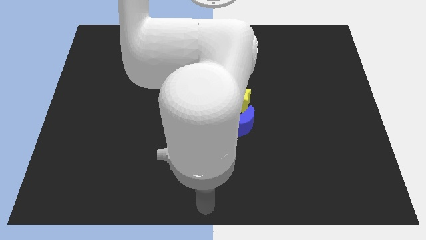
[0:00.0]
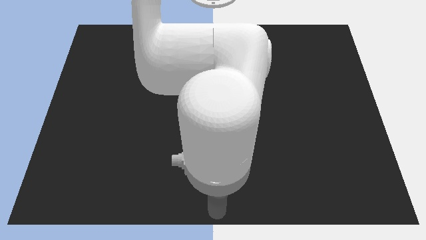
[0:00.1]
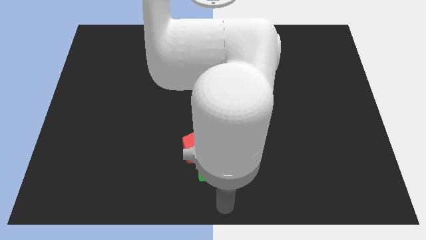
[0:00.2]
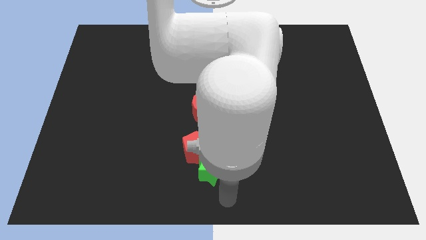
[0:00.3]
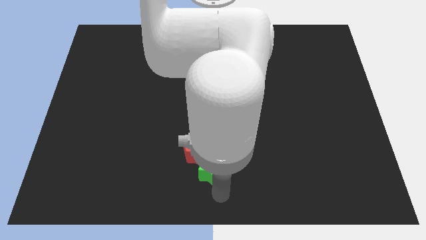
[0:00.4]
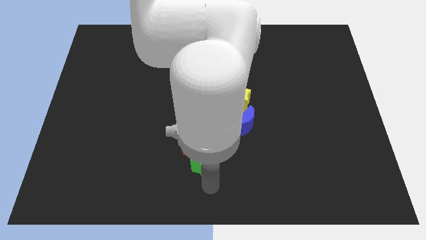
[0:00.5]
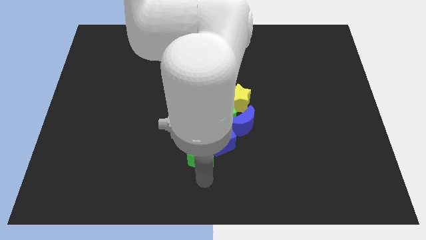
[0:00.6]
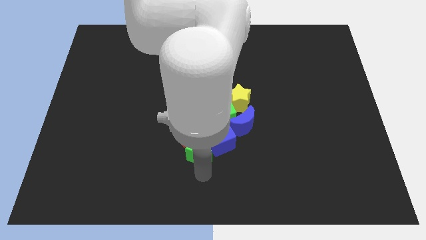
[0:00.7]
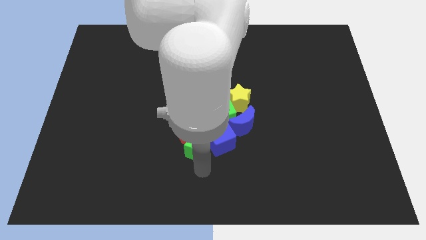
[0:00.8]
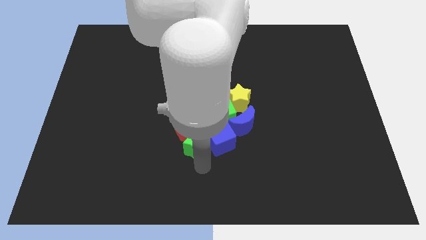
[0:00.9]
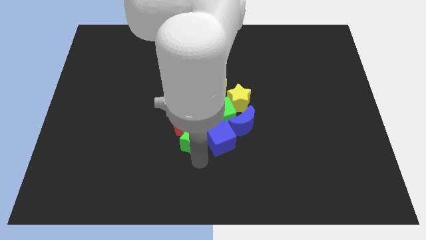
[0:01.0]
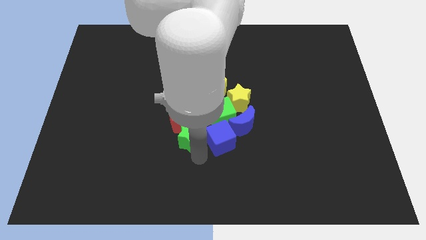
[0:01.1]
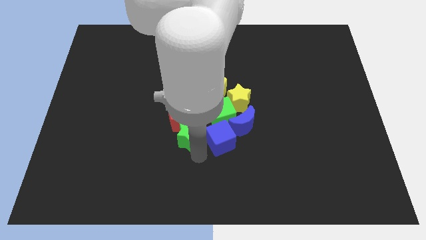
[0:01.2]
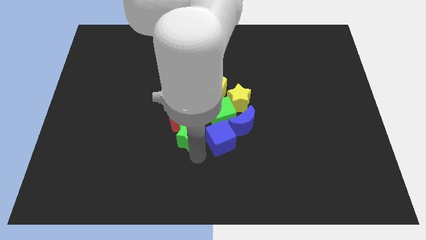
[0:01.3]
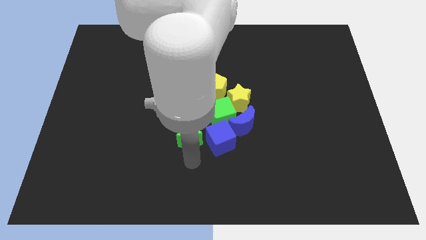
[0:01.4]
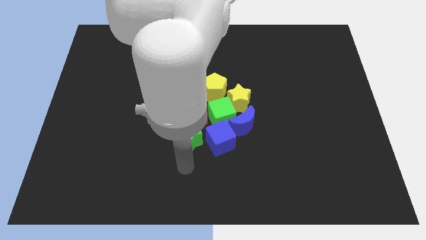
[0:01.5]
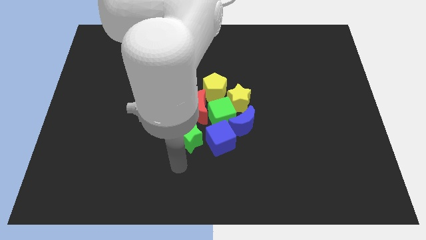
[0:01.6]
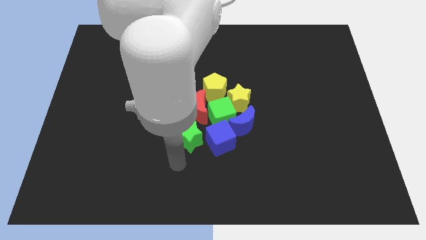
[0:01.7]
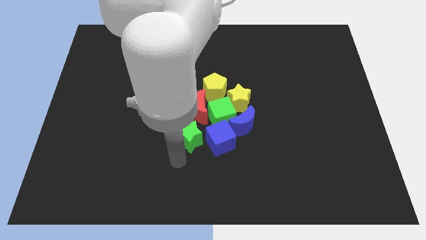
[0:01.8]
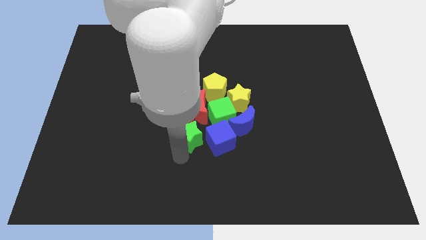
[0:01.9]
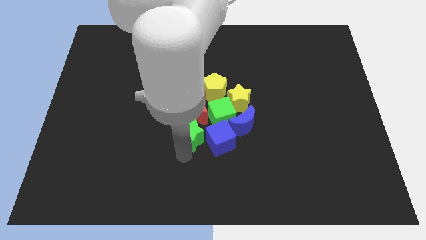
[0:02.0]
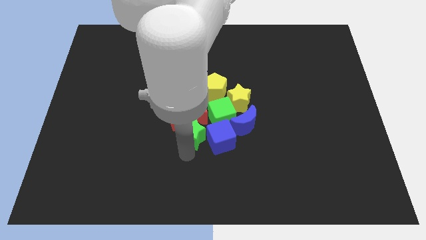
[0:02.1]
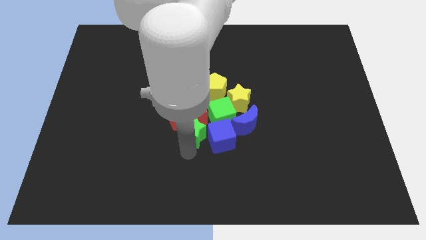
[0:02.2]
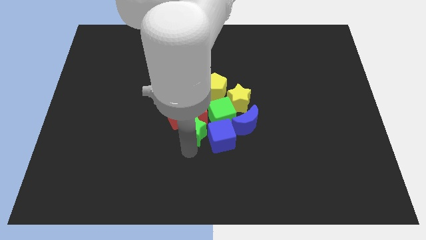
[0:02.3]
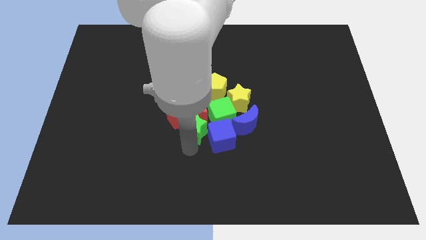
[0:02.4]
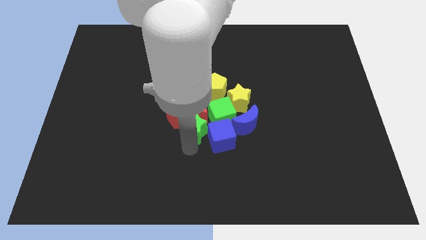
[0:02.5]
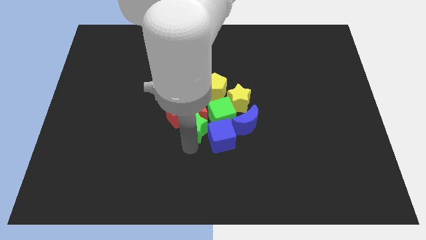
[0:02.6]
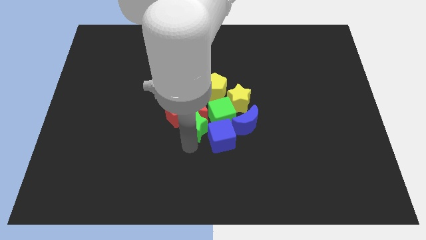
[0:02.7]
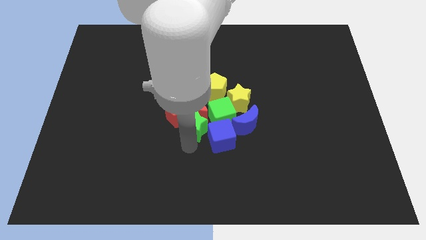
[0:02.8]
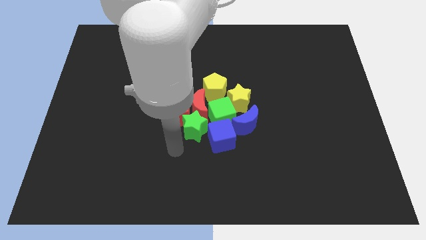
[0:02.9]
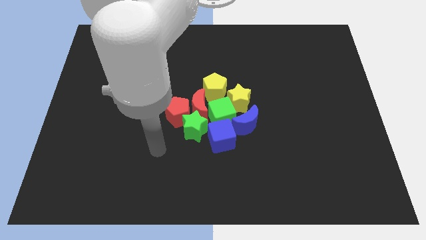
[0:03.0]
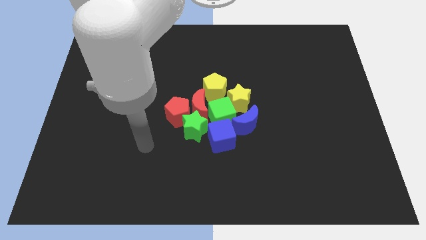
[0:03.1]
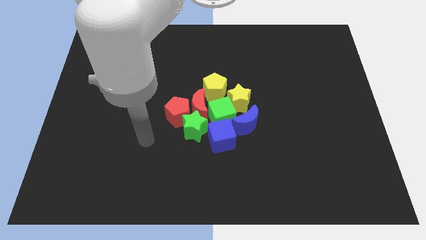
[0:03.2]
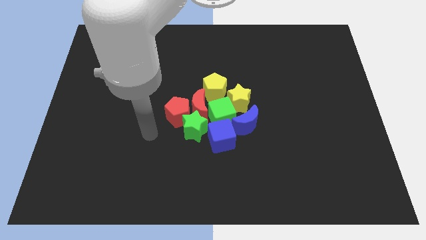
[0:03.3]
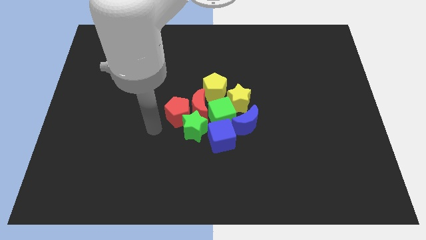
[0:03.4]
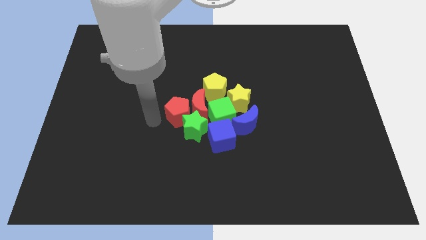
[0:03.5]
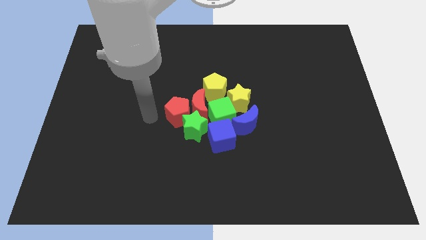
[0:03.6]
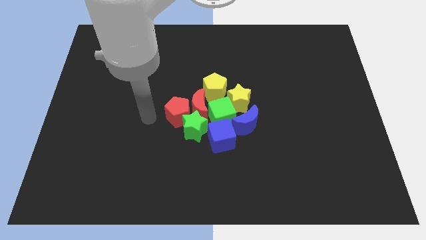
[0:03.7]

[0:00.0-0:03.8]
move the green star into the red pentagon towards the group of blocks

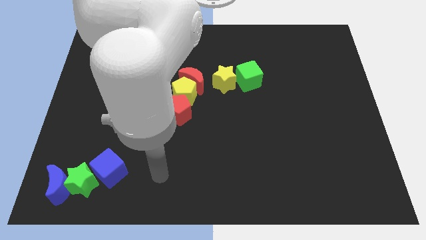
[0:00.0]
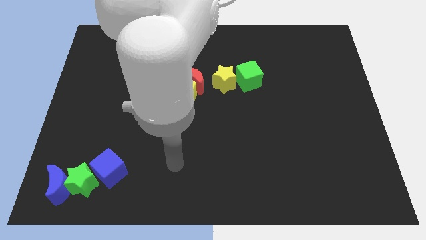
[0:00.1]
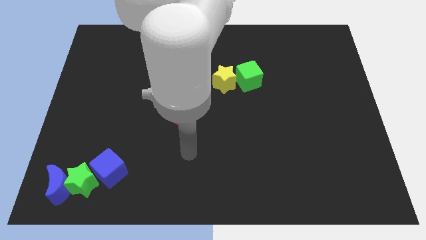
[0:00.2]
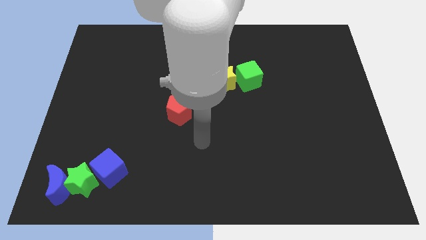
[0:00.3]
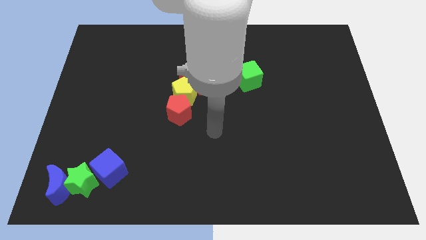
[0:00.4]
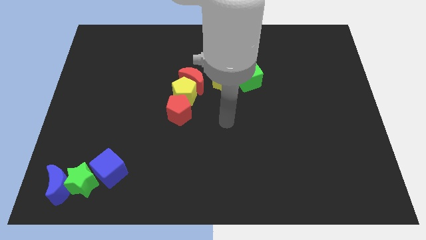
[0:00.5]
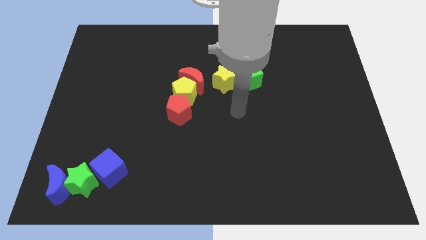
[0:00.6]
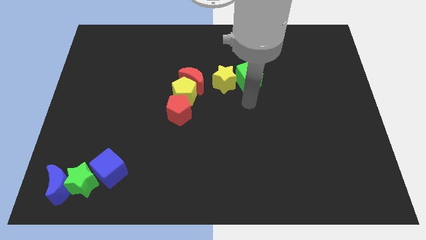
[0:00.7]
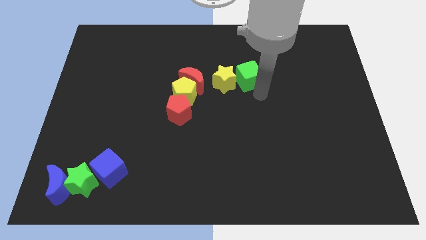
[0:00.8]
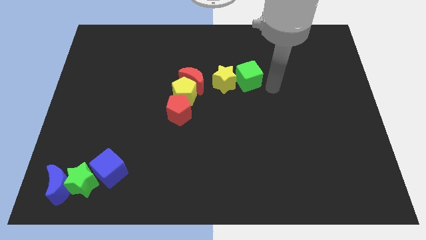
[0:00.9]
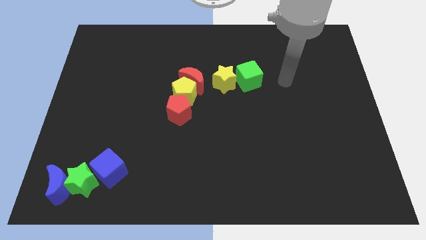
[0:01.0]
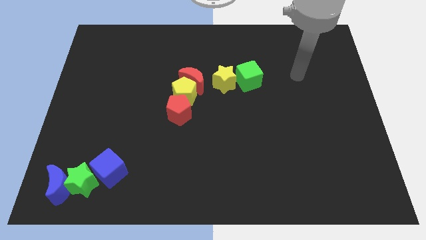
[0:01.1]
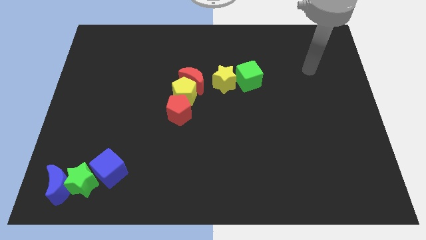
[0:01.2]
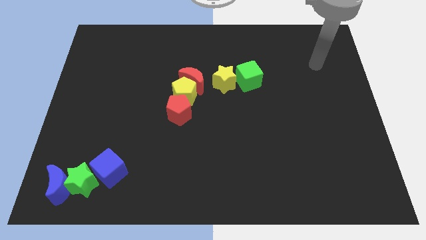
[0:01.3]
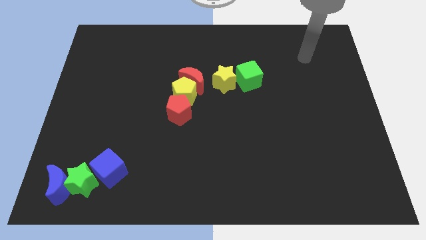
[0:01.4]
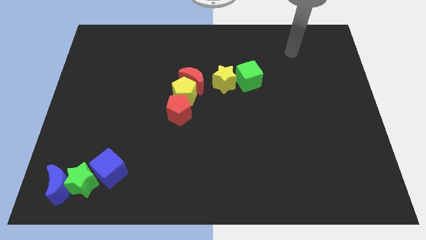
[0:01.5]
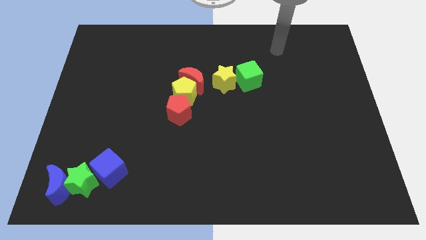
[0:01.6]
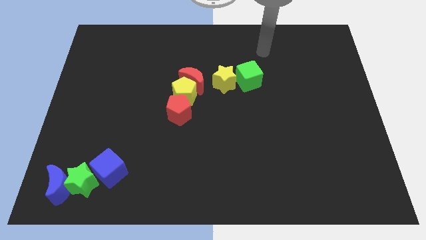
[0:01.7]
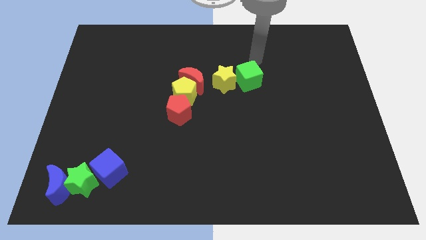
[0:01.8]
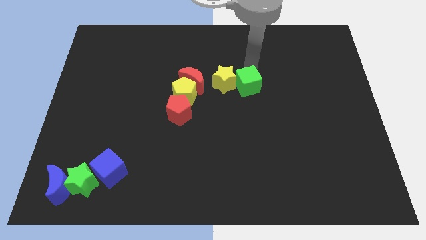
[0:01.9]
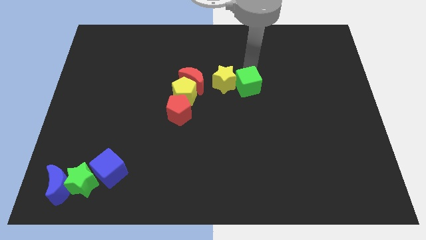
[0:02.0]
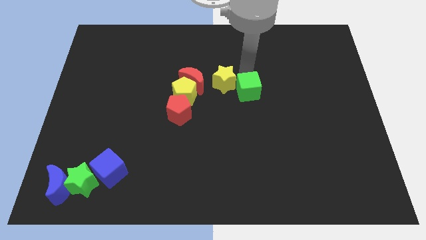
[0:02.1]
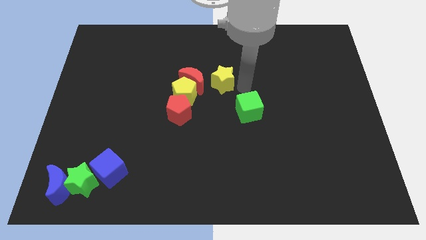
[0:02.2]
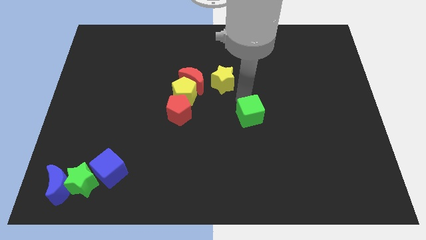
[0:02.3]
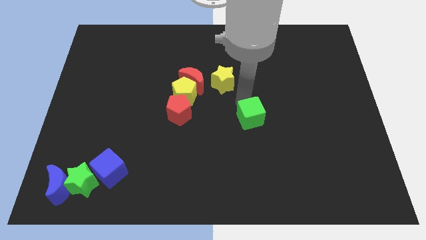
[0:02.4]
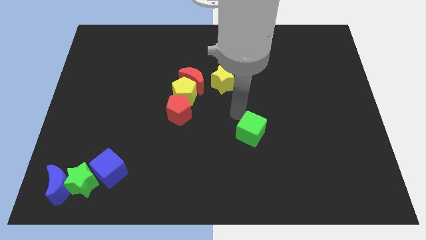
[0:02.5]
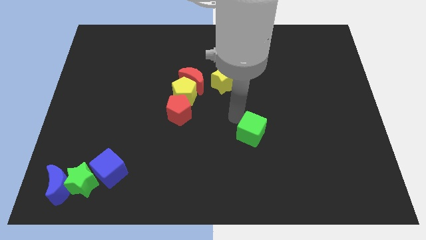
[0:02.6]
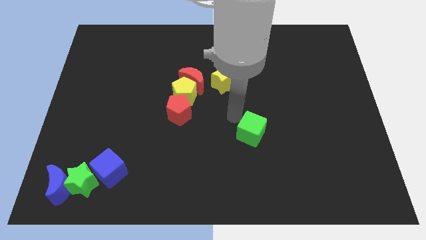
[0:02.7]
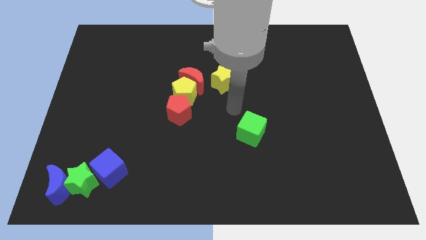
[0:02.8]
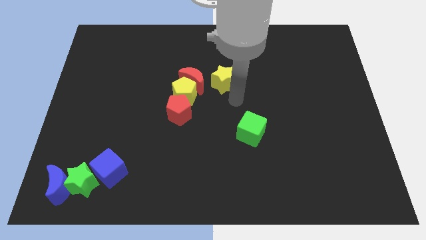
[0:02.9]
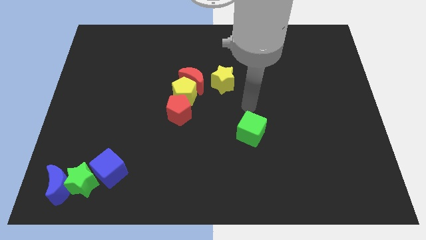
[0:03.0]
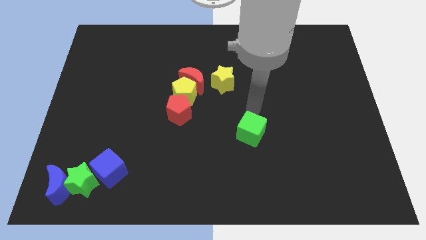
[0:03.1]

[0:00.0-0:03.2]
separate green cube away from the yellow star

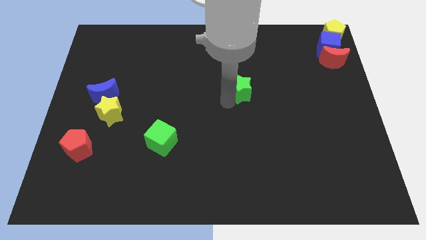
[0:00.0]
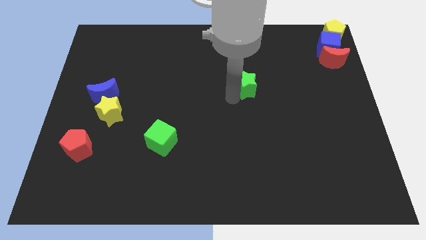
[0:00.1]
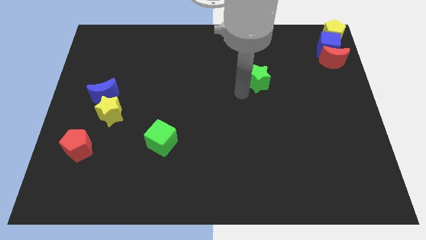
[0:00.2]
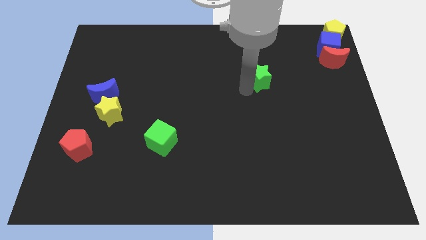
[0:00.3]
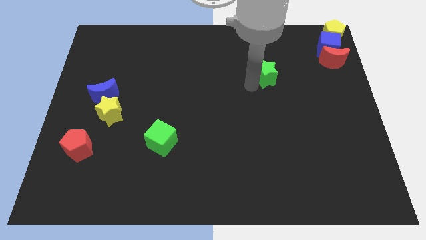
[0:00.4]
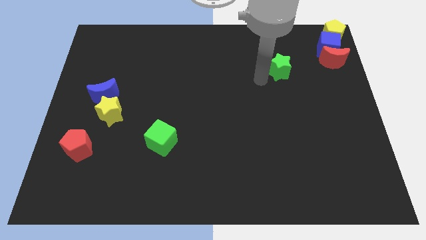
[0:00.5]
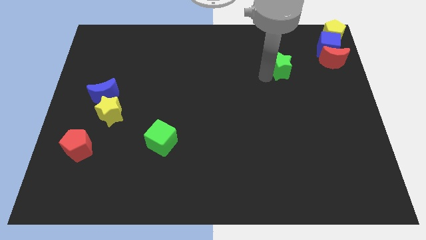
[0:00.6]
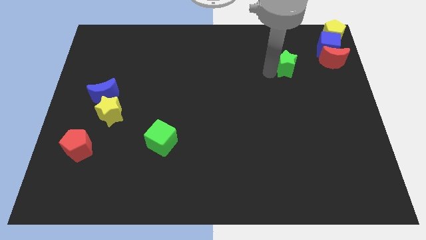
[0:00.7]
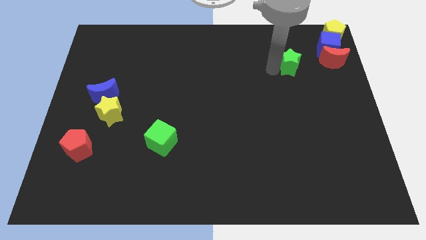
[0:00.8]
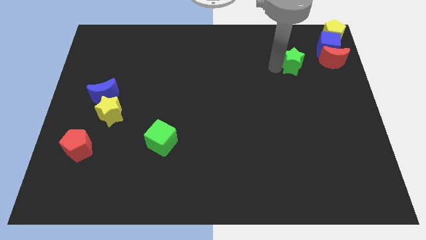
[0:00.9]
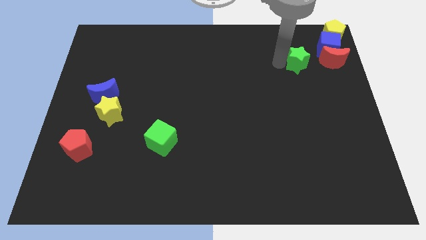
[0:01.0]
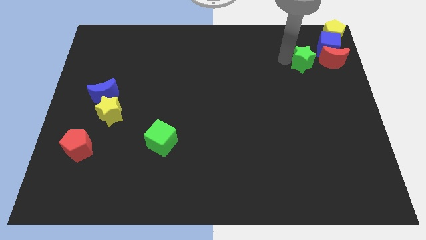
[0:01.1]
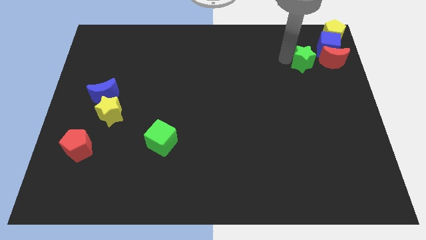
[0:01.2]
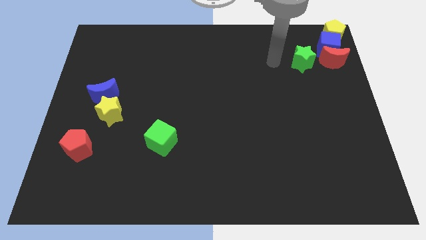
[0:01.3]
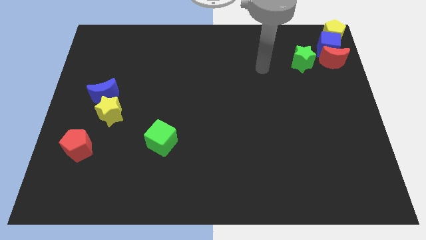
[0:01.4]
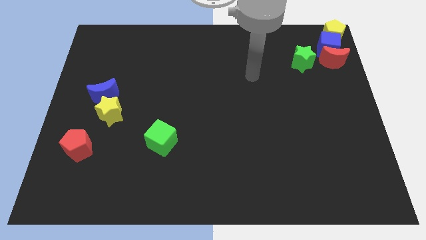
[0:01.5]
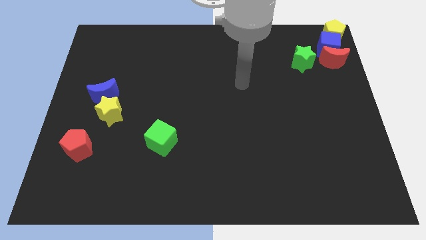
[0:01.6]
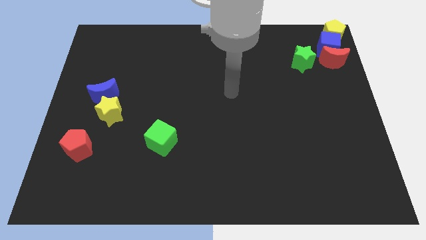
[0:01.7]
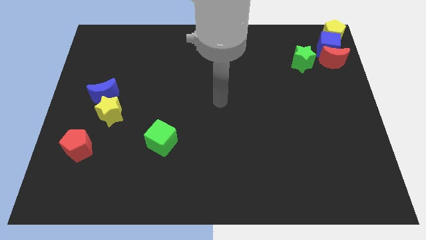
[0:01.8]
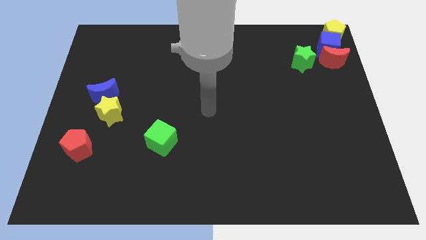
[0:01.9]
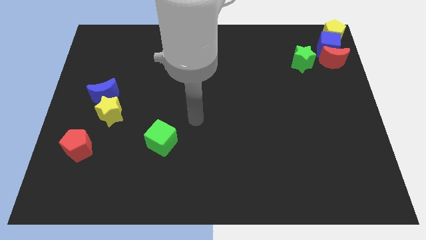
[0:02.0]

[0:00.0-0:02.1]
push green star to the left of red moon
